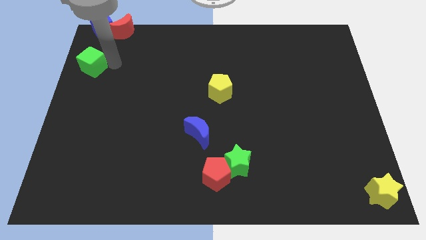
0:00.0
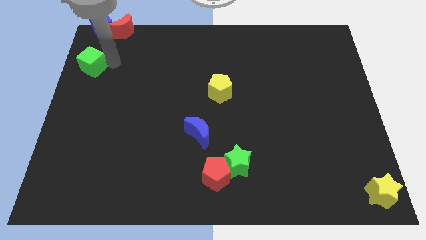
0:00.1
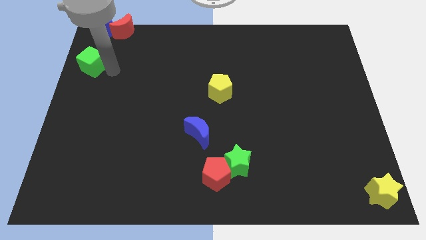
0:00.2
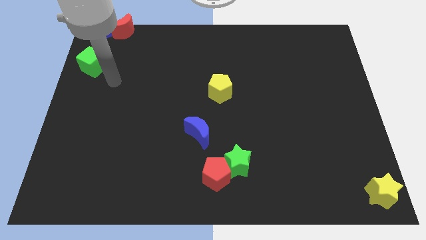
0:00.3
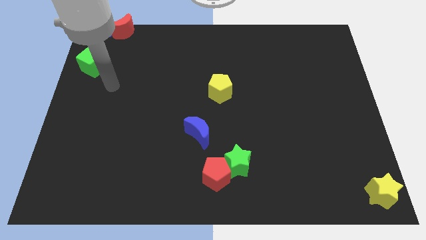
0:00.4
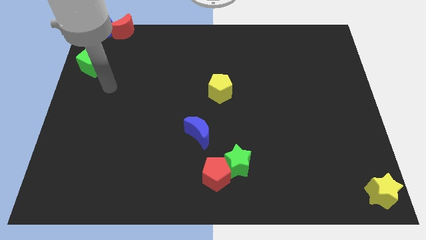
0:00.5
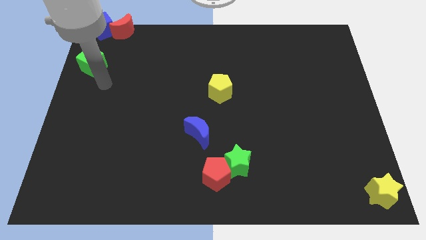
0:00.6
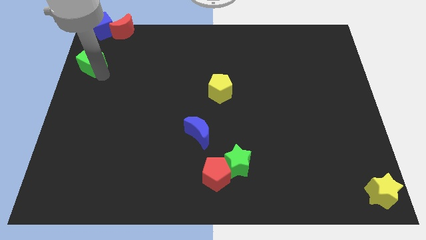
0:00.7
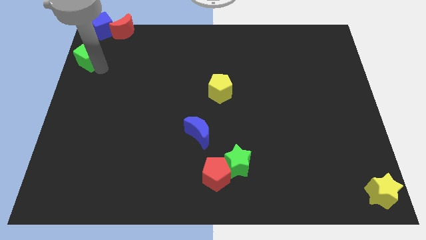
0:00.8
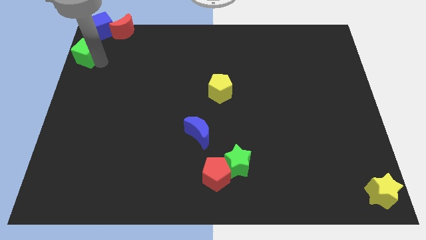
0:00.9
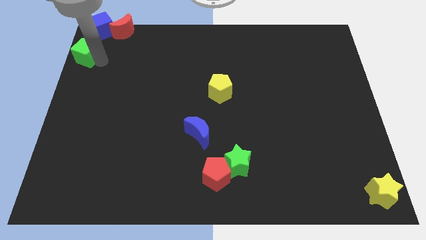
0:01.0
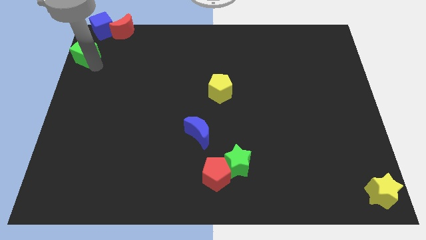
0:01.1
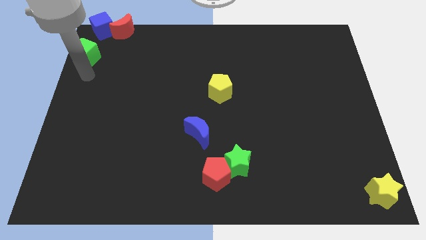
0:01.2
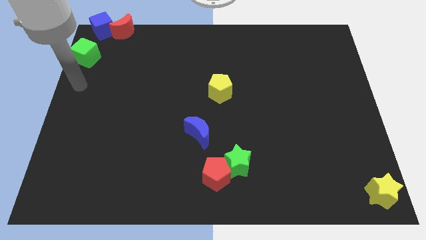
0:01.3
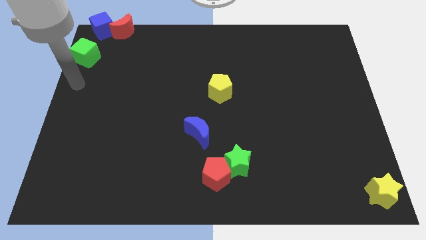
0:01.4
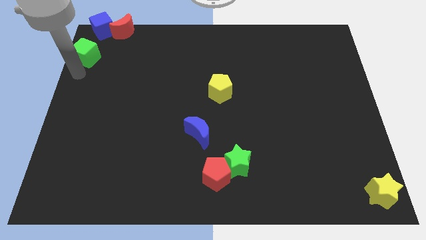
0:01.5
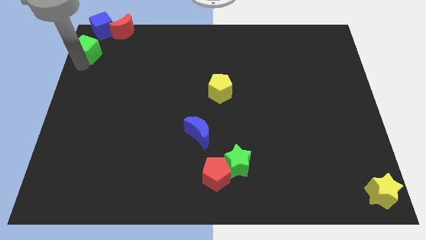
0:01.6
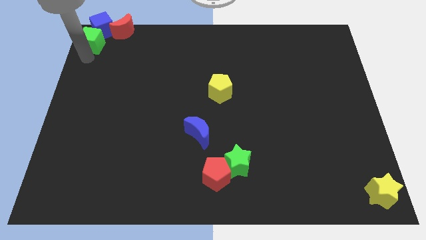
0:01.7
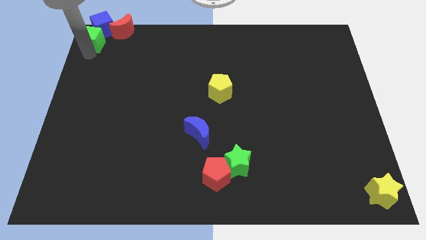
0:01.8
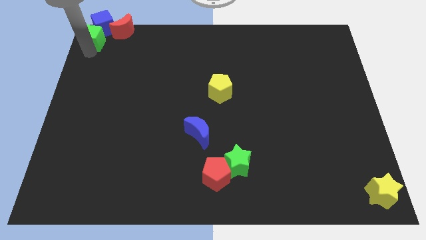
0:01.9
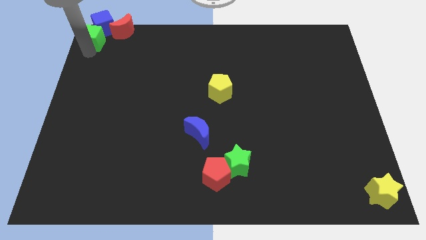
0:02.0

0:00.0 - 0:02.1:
push the green cube into the blue cube to the top left corner

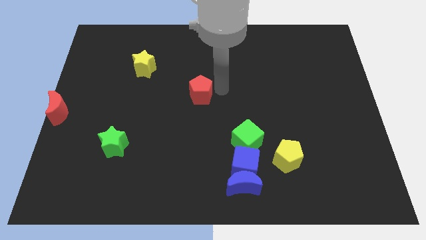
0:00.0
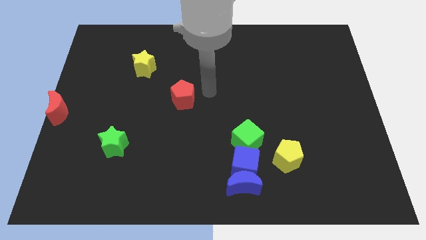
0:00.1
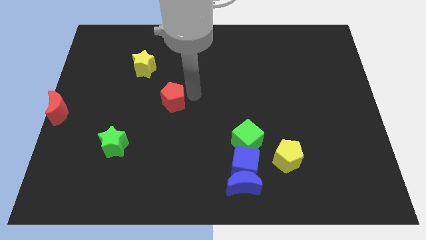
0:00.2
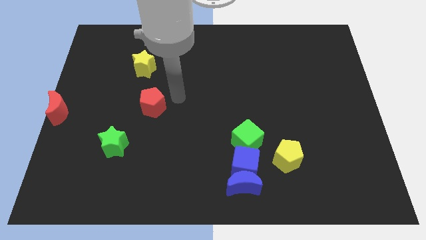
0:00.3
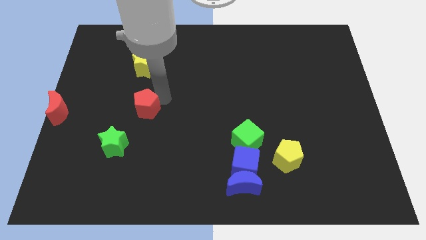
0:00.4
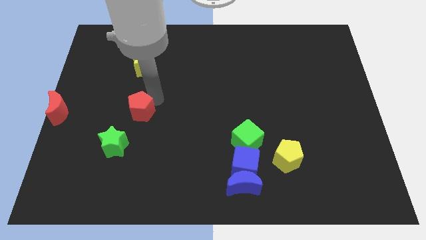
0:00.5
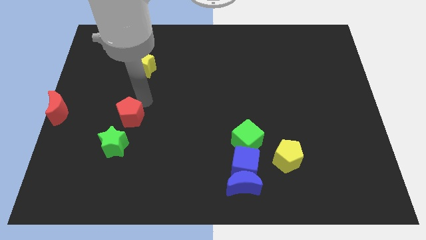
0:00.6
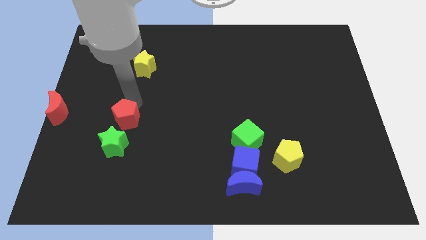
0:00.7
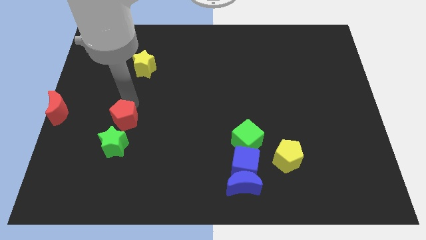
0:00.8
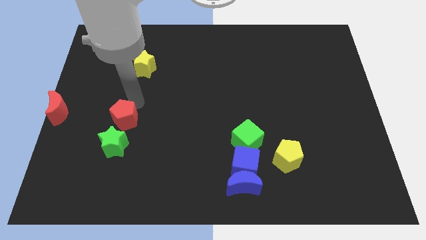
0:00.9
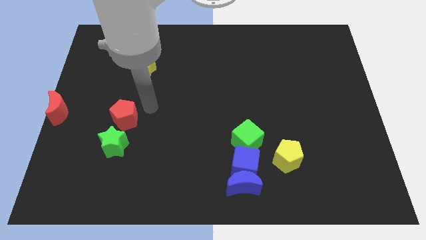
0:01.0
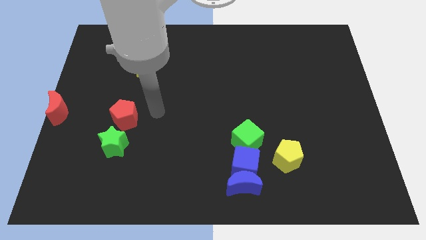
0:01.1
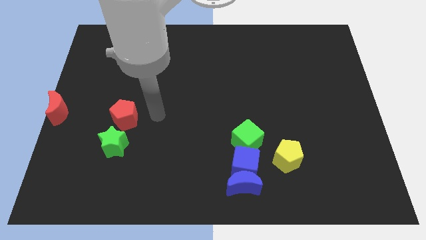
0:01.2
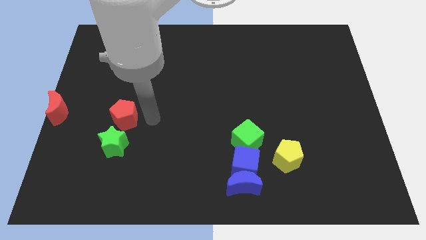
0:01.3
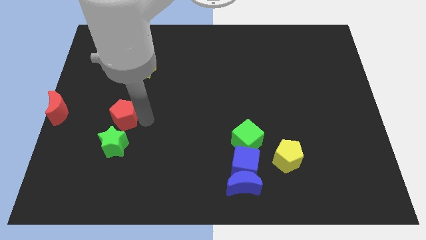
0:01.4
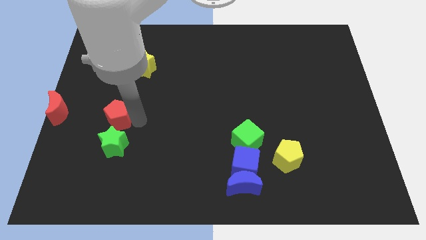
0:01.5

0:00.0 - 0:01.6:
put the red pentagon above the green star

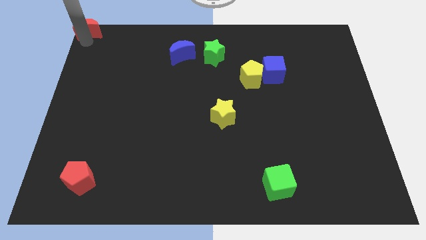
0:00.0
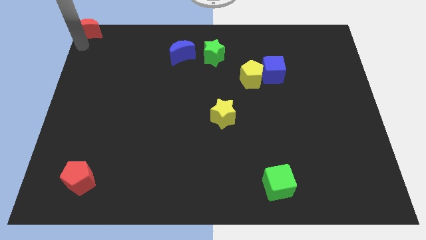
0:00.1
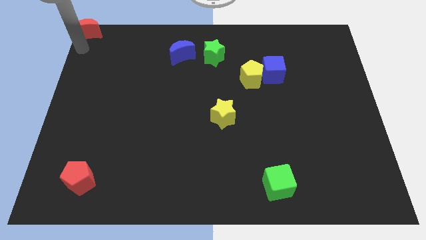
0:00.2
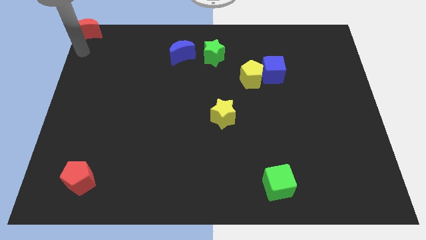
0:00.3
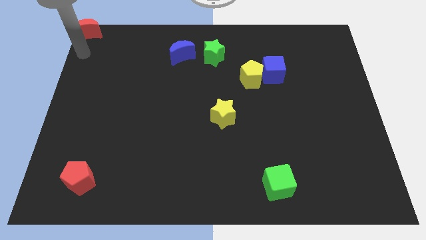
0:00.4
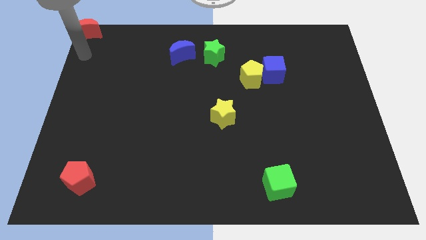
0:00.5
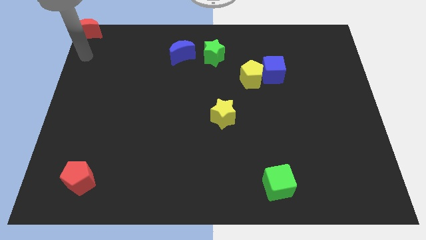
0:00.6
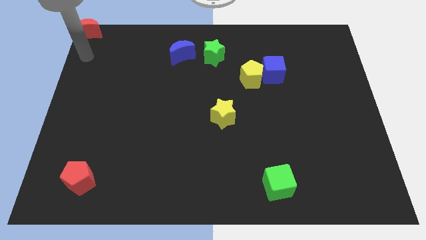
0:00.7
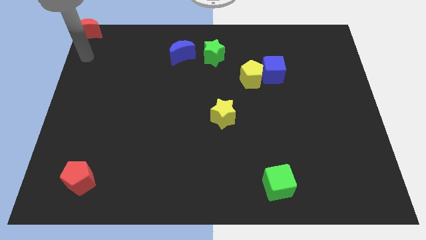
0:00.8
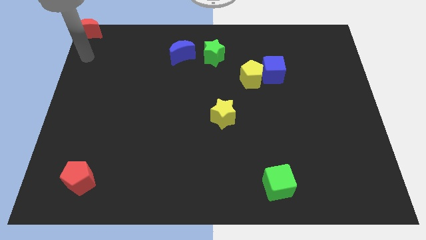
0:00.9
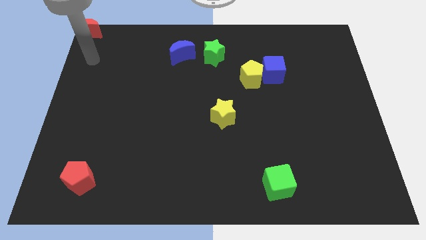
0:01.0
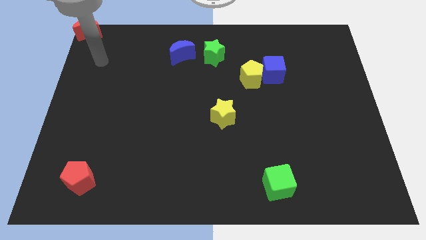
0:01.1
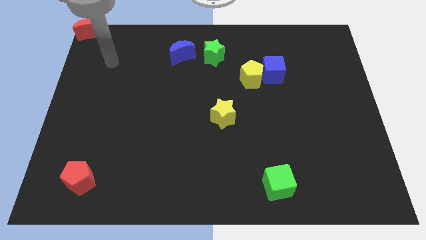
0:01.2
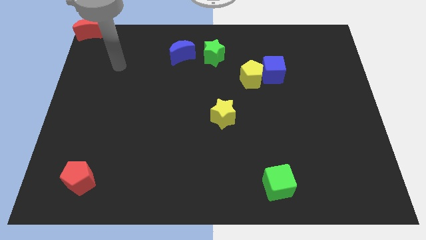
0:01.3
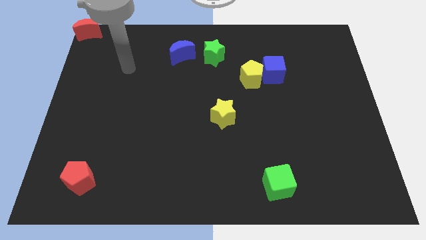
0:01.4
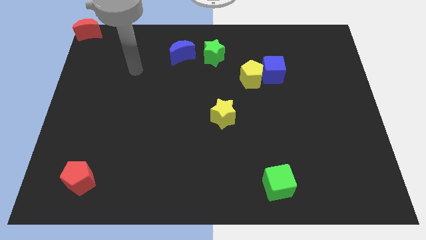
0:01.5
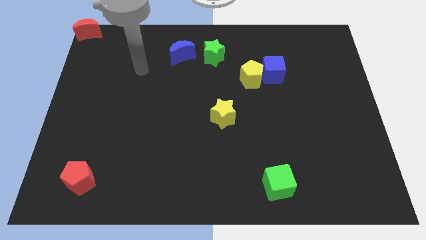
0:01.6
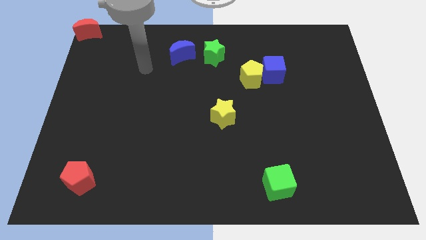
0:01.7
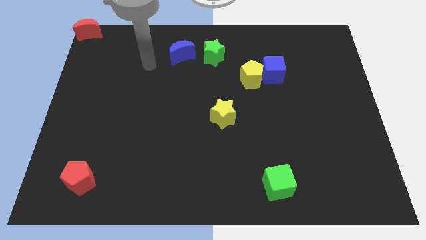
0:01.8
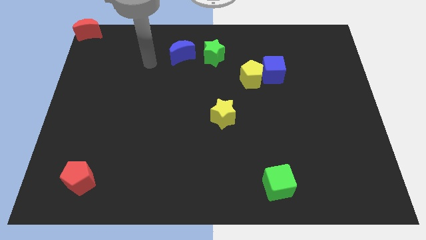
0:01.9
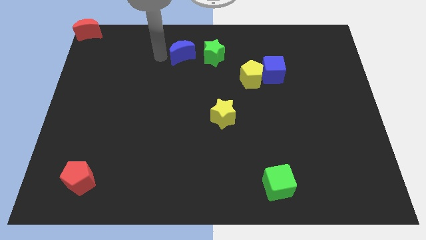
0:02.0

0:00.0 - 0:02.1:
move your arm away from the red moon

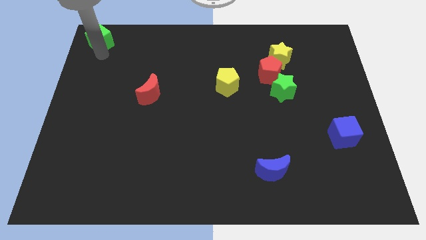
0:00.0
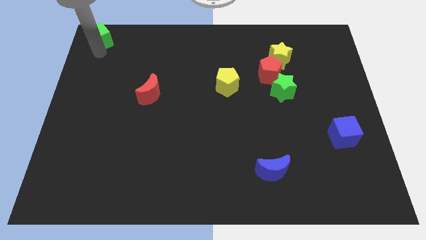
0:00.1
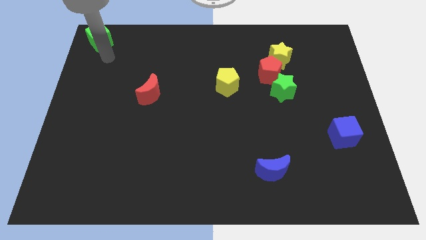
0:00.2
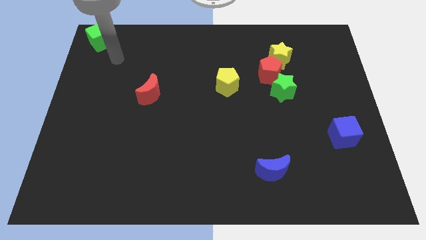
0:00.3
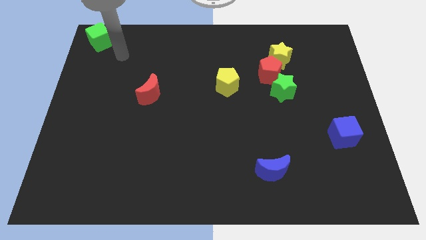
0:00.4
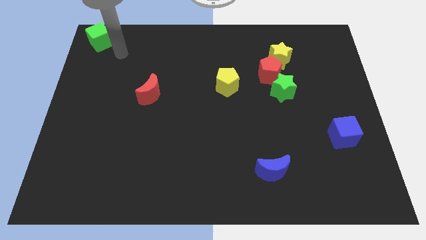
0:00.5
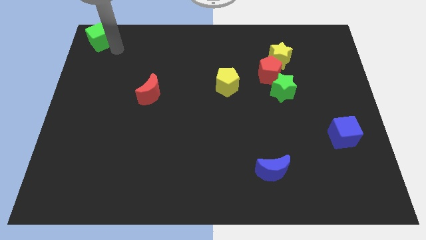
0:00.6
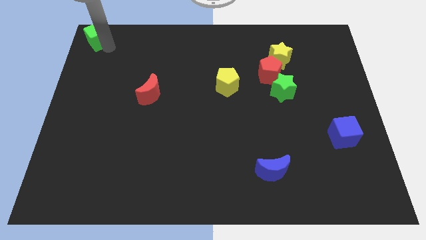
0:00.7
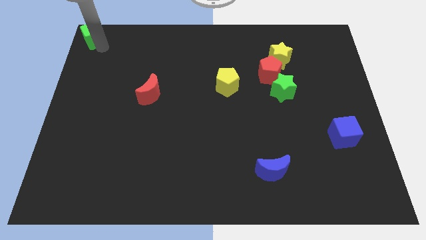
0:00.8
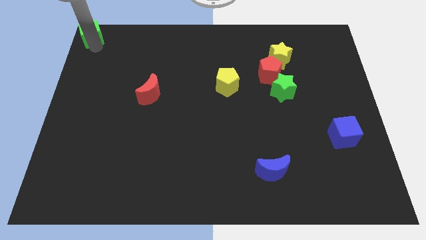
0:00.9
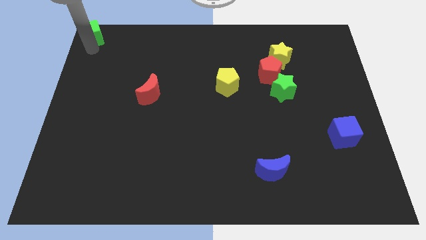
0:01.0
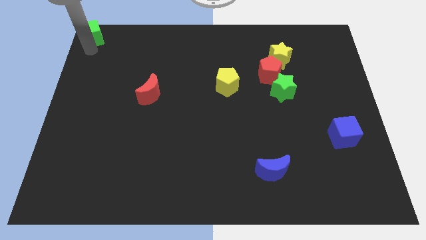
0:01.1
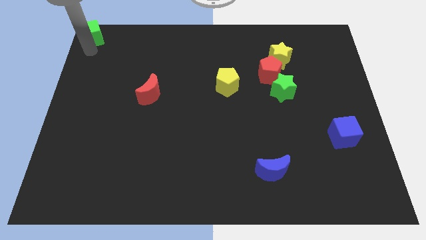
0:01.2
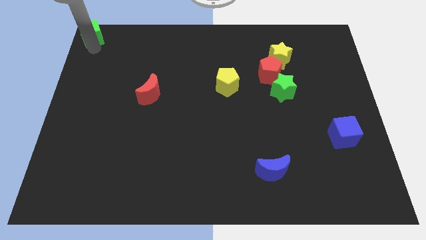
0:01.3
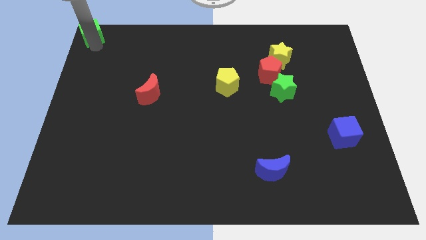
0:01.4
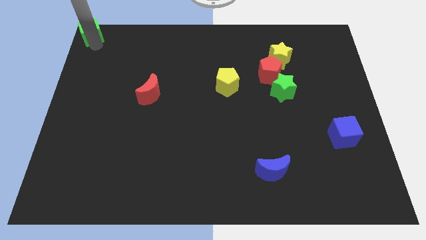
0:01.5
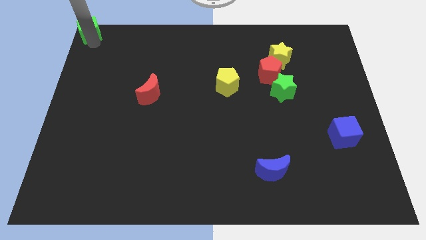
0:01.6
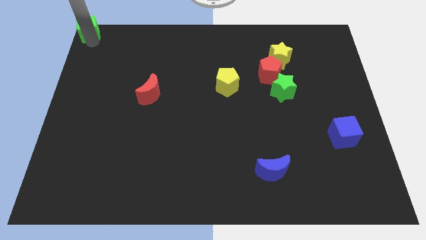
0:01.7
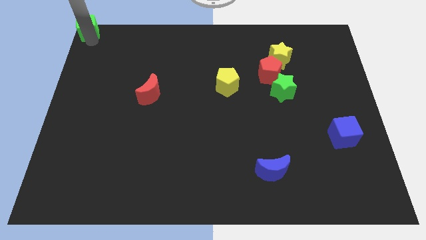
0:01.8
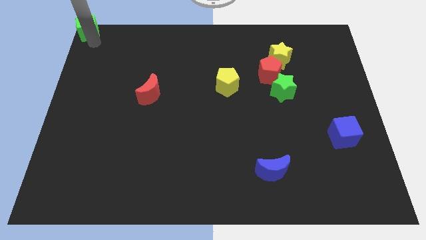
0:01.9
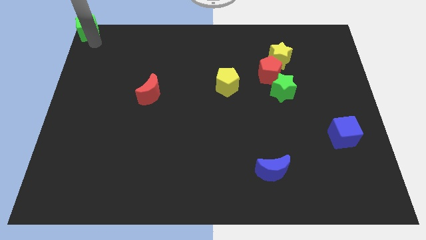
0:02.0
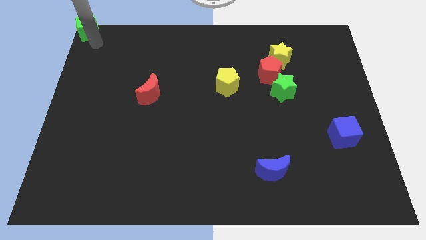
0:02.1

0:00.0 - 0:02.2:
place green cube towards top left corner

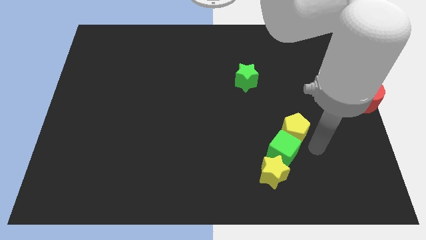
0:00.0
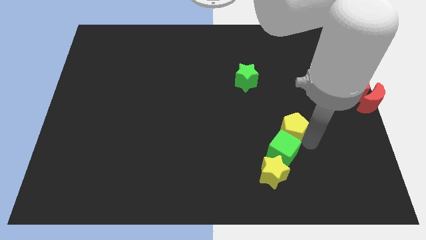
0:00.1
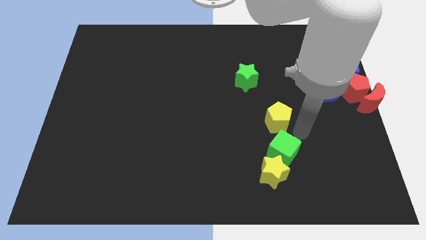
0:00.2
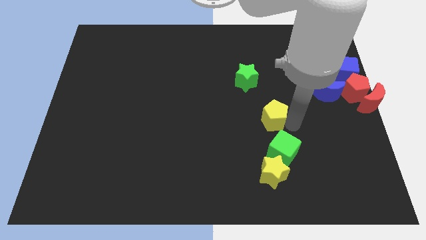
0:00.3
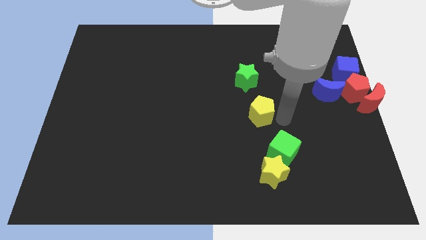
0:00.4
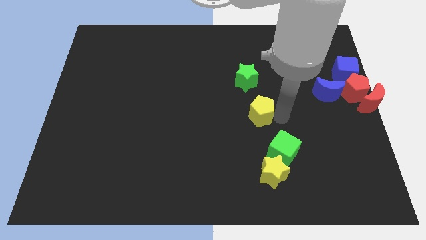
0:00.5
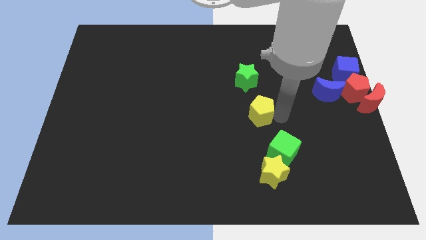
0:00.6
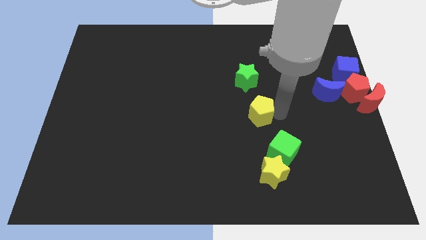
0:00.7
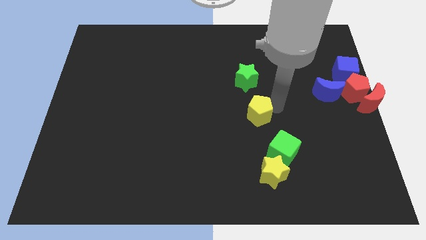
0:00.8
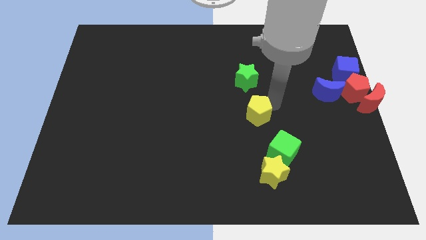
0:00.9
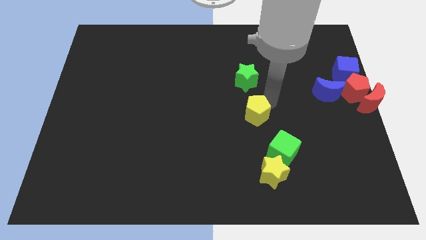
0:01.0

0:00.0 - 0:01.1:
separate yellow pentagon from green cube
